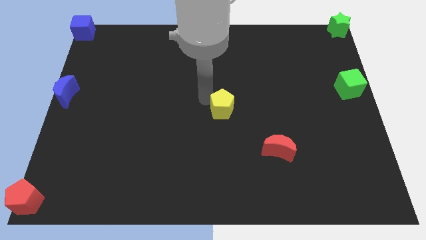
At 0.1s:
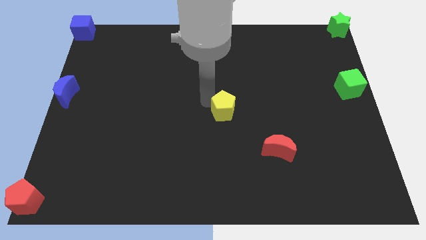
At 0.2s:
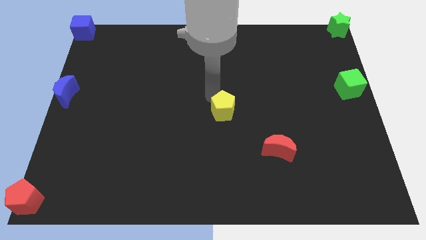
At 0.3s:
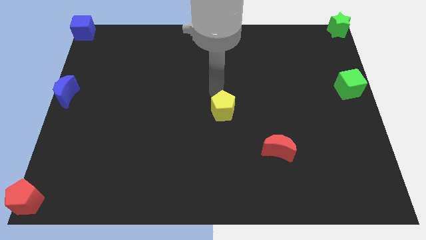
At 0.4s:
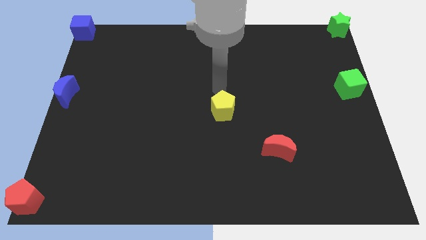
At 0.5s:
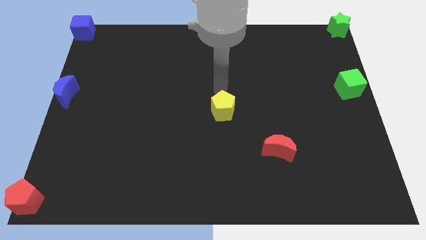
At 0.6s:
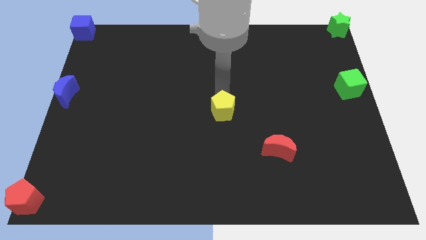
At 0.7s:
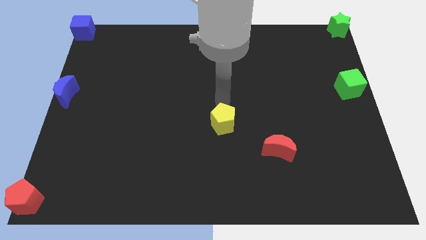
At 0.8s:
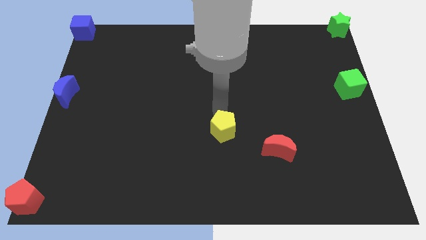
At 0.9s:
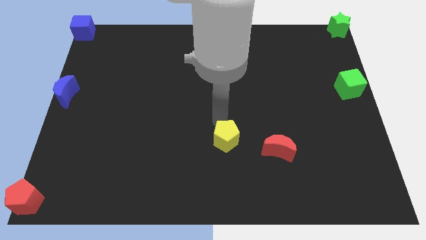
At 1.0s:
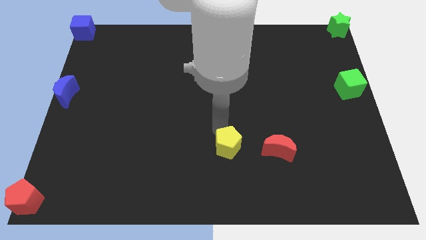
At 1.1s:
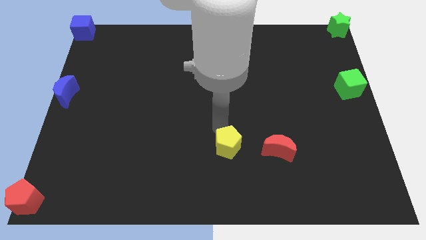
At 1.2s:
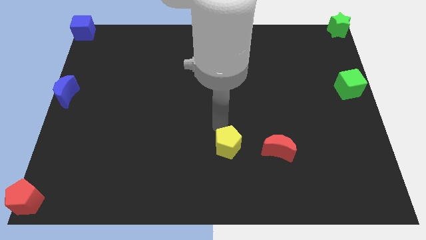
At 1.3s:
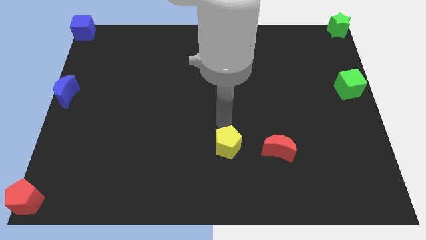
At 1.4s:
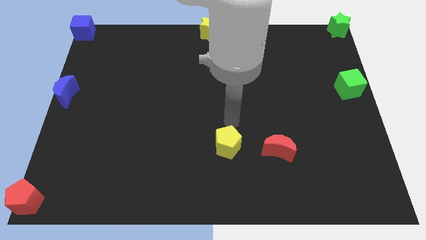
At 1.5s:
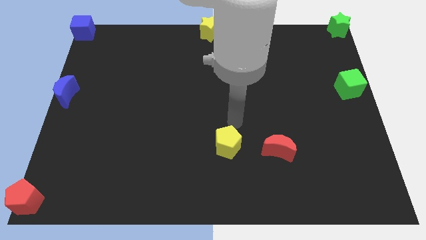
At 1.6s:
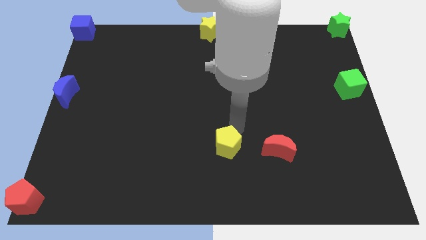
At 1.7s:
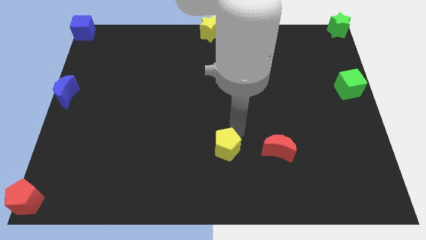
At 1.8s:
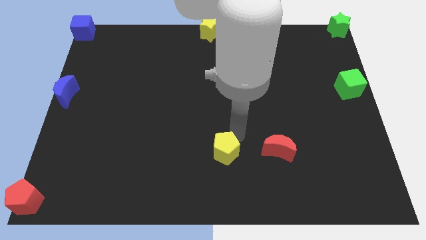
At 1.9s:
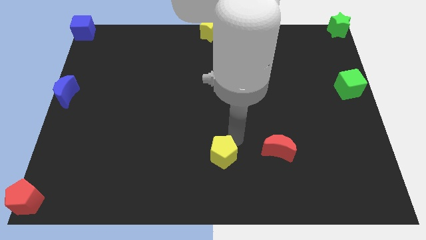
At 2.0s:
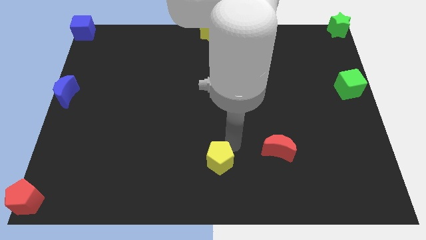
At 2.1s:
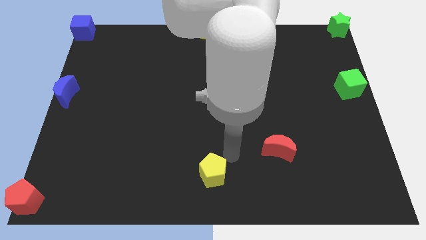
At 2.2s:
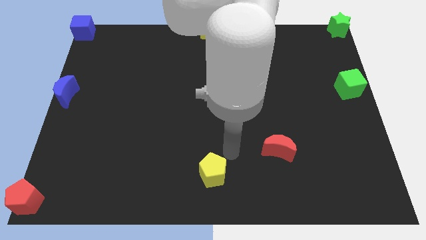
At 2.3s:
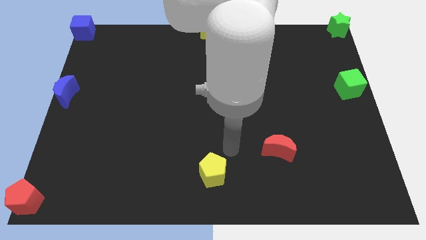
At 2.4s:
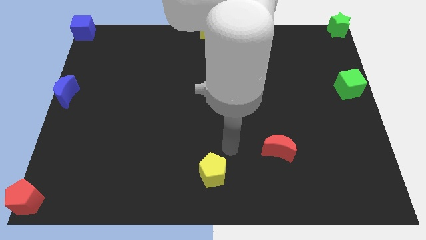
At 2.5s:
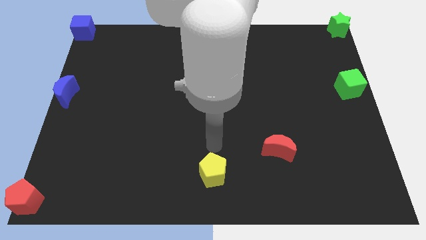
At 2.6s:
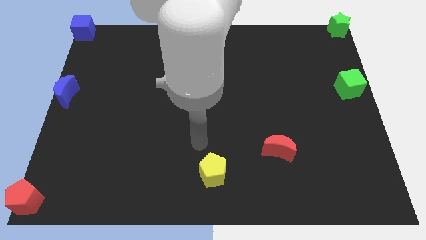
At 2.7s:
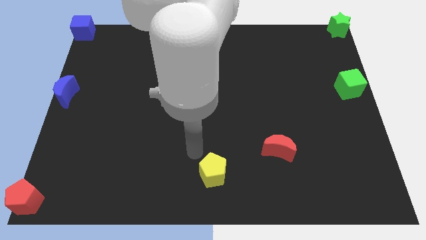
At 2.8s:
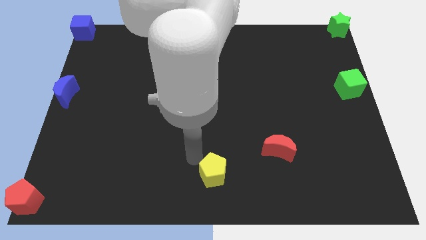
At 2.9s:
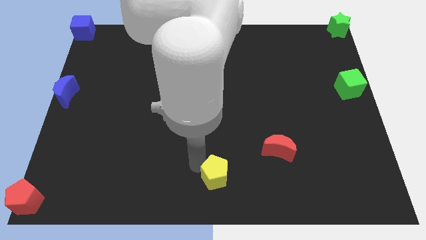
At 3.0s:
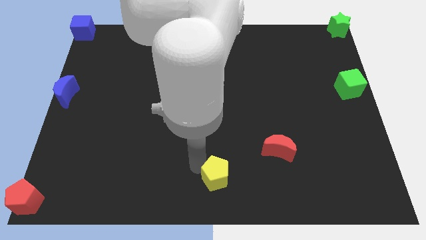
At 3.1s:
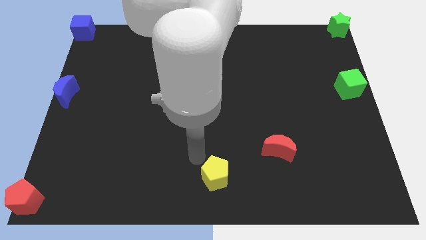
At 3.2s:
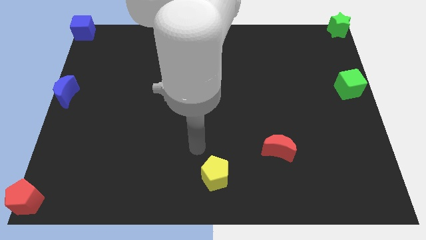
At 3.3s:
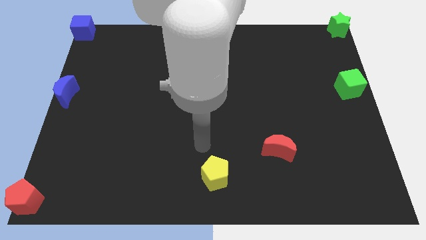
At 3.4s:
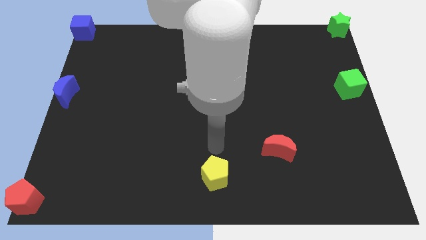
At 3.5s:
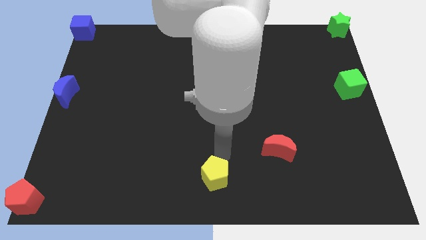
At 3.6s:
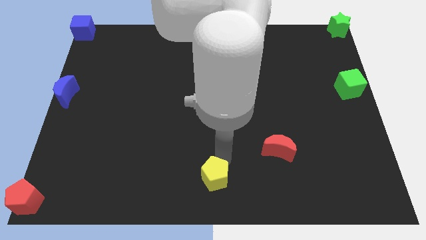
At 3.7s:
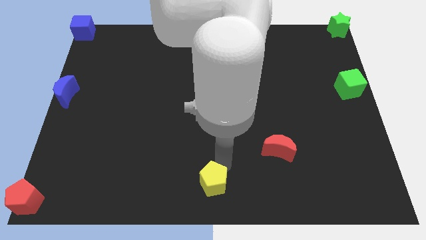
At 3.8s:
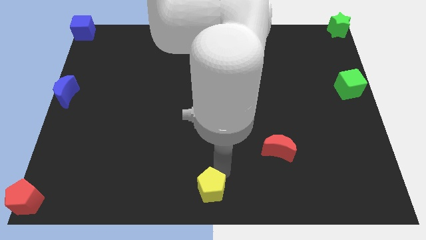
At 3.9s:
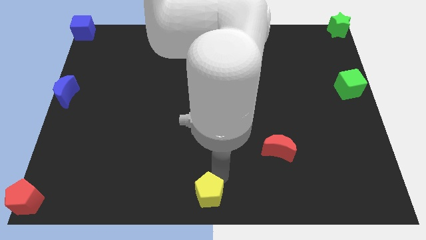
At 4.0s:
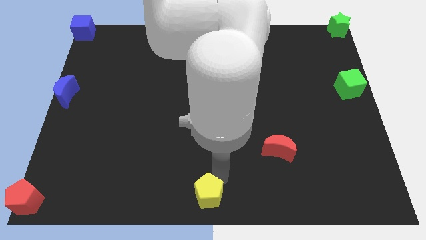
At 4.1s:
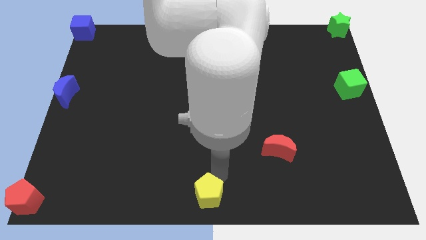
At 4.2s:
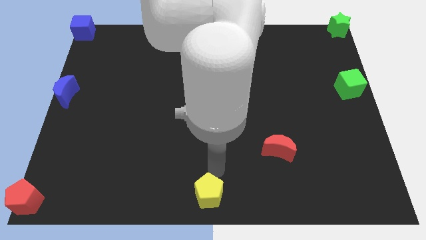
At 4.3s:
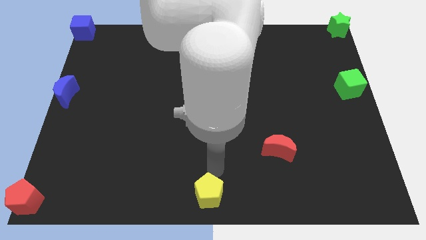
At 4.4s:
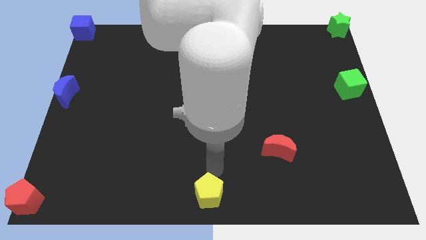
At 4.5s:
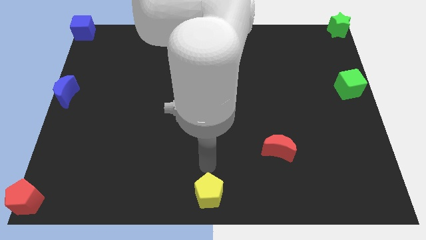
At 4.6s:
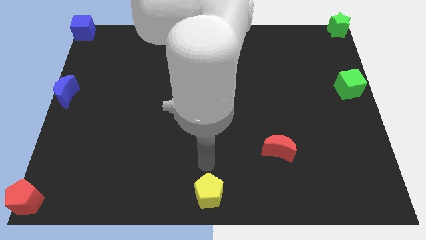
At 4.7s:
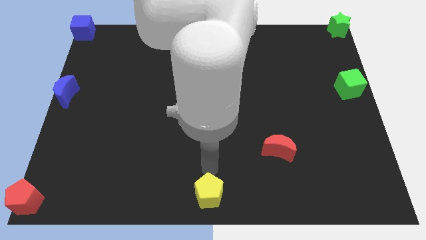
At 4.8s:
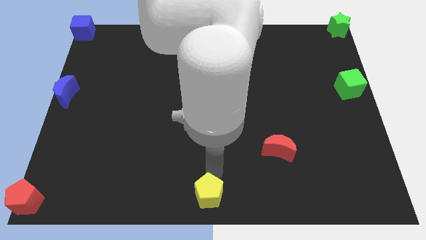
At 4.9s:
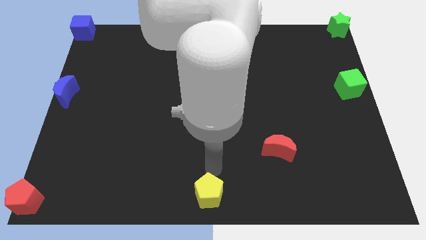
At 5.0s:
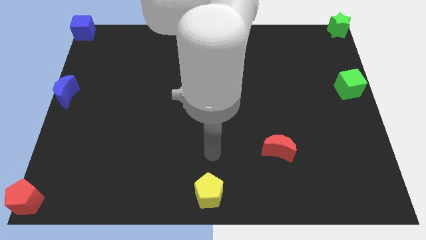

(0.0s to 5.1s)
move yellow pentagon to the bottom center of the board

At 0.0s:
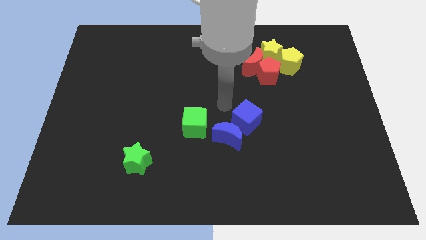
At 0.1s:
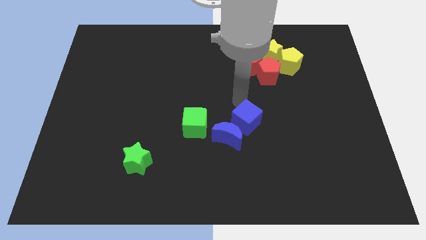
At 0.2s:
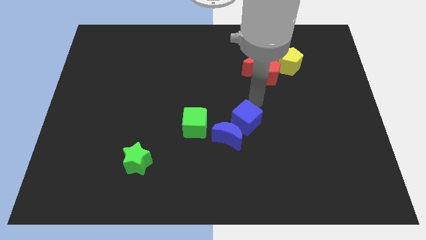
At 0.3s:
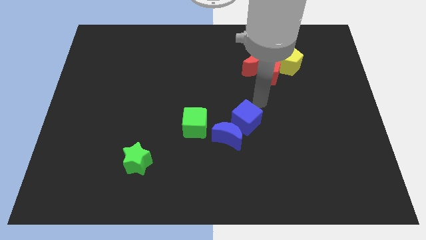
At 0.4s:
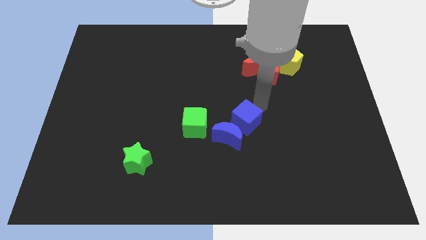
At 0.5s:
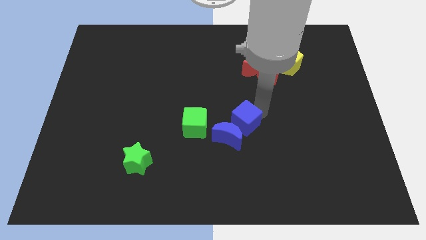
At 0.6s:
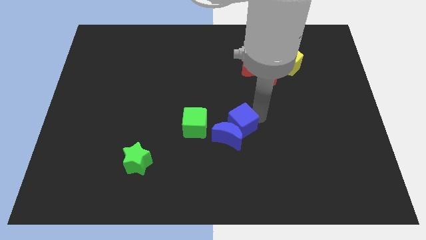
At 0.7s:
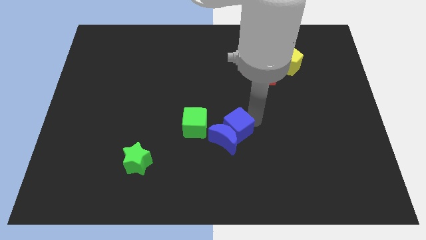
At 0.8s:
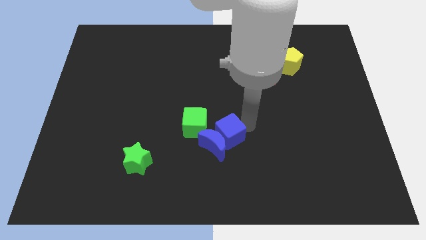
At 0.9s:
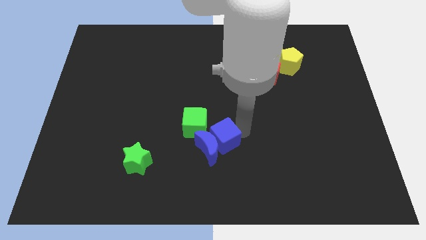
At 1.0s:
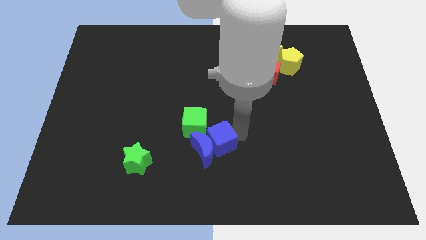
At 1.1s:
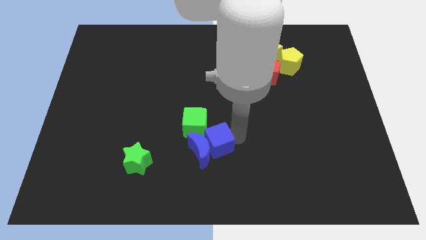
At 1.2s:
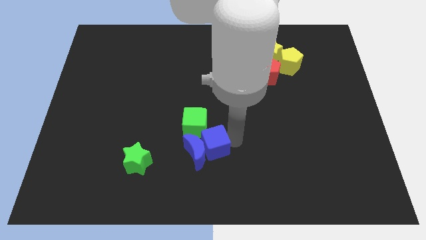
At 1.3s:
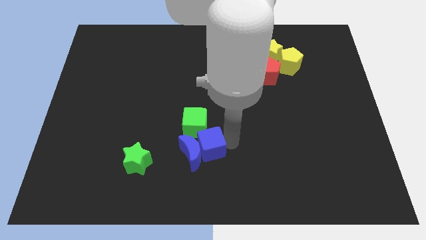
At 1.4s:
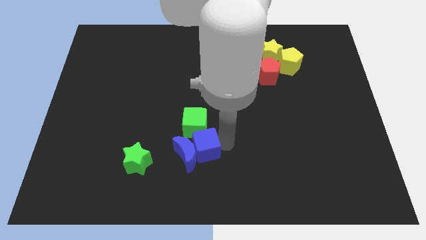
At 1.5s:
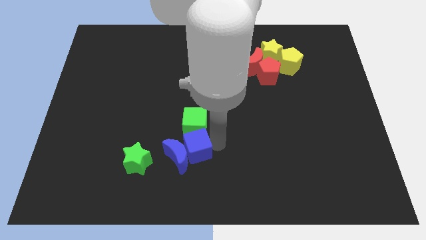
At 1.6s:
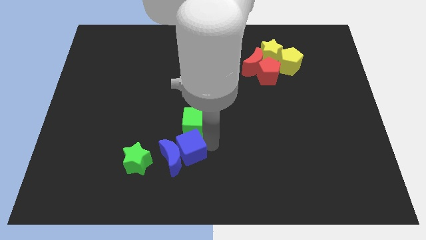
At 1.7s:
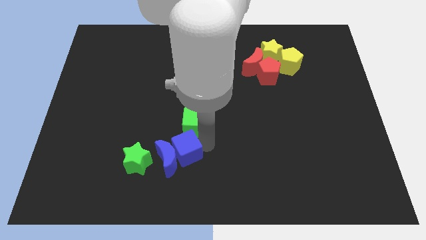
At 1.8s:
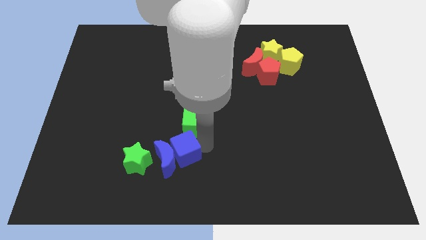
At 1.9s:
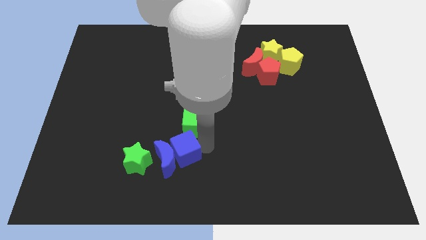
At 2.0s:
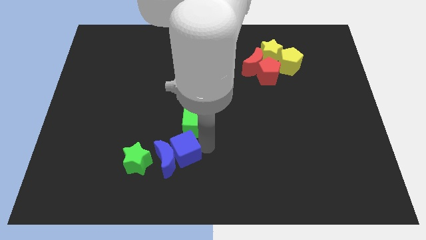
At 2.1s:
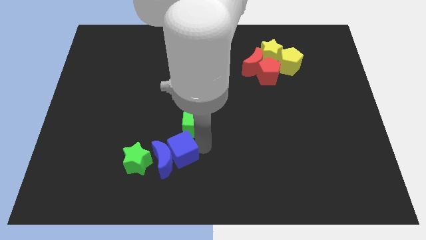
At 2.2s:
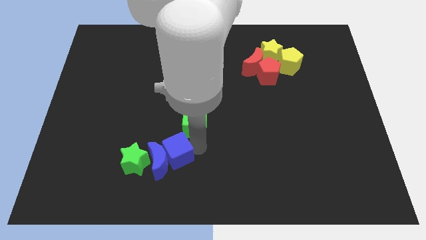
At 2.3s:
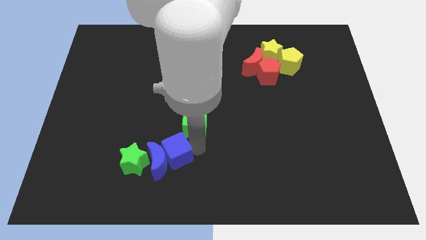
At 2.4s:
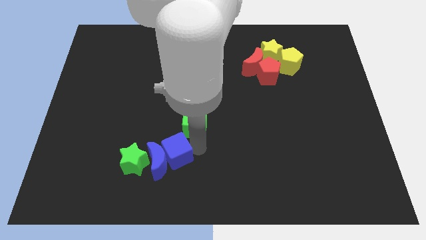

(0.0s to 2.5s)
move blue cube along with blue crescent into the green star

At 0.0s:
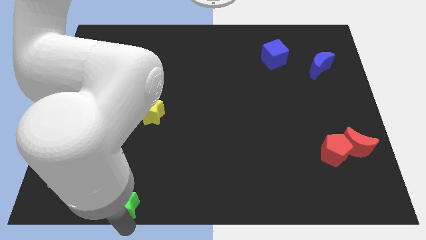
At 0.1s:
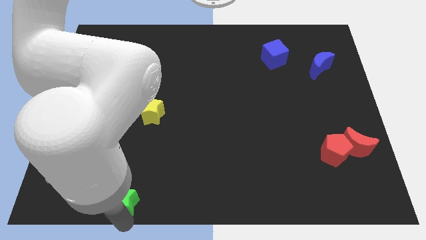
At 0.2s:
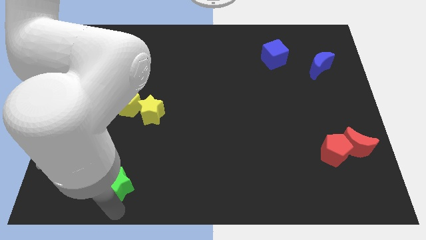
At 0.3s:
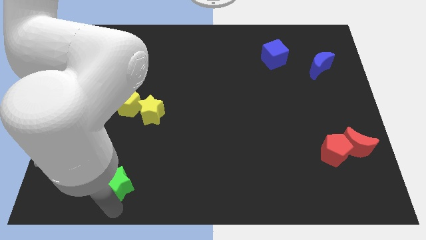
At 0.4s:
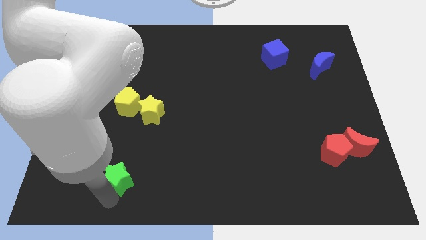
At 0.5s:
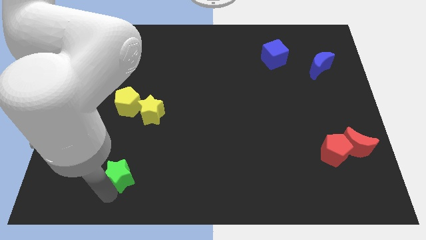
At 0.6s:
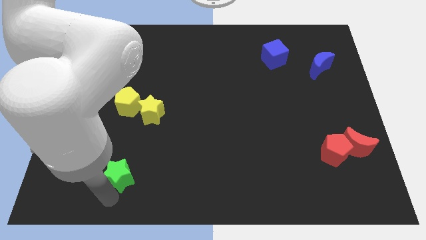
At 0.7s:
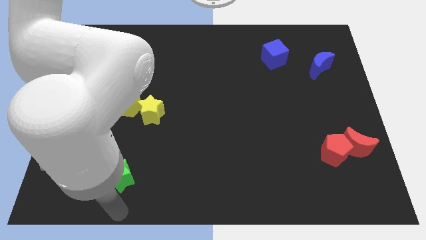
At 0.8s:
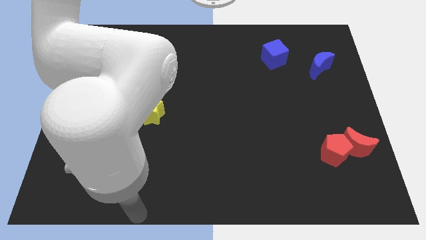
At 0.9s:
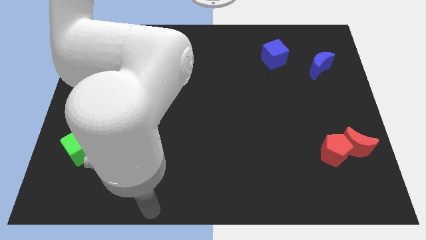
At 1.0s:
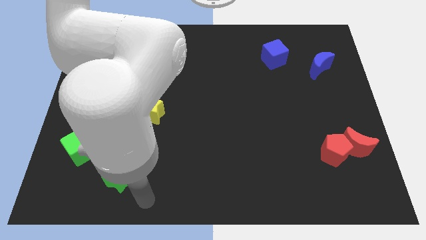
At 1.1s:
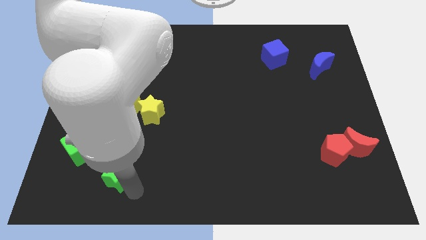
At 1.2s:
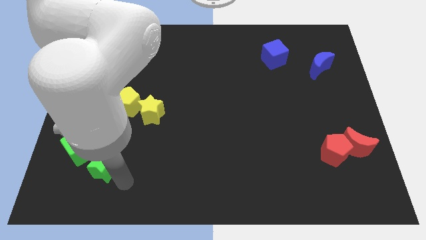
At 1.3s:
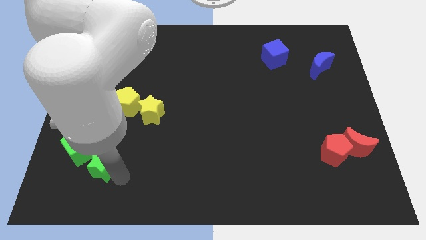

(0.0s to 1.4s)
place green star below the green cube
